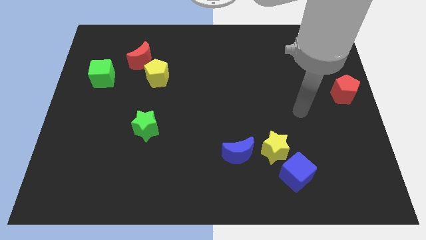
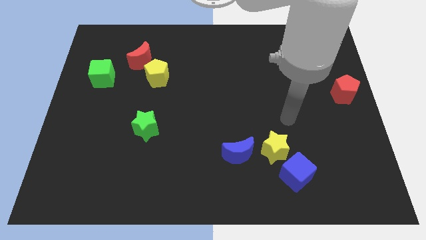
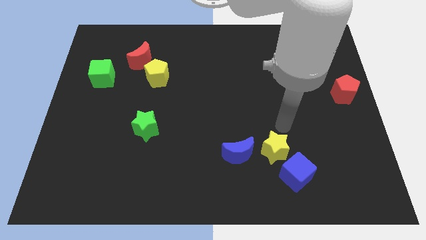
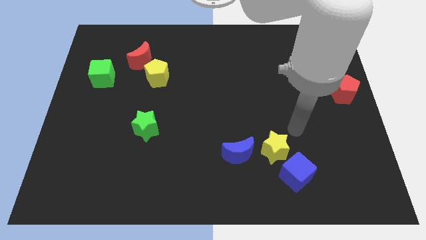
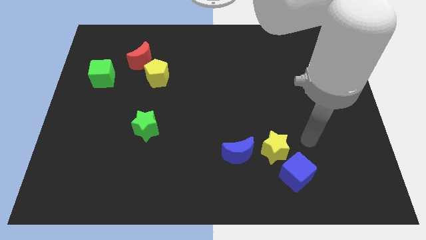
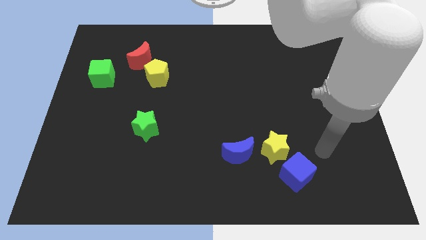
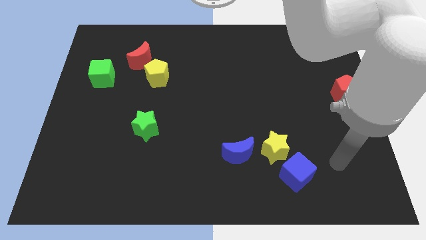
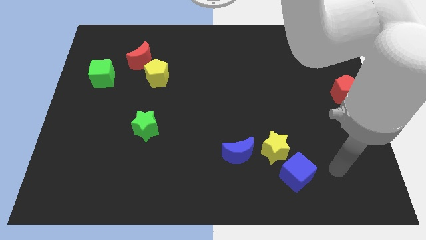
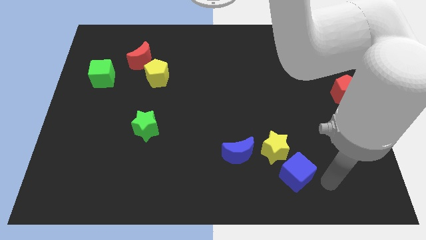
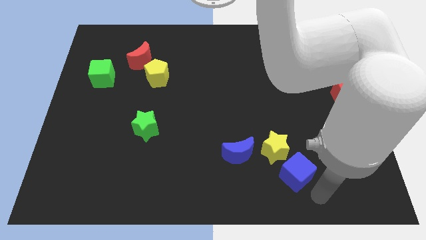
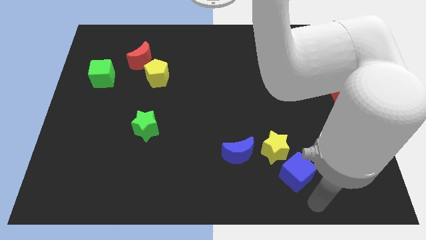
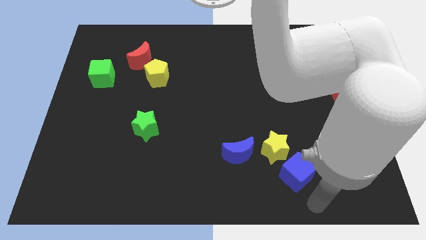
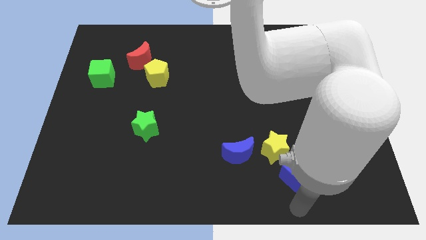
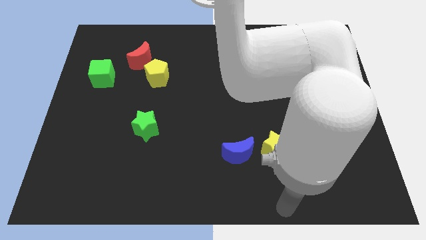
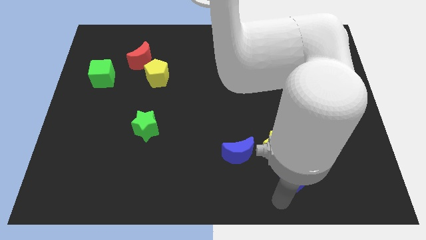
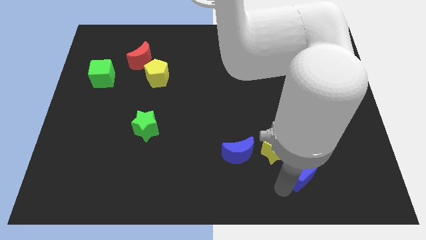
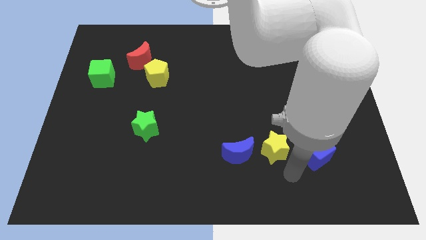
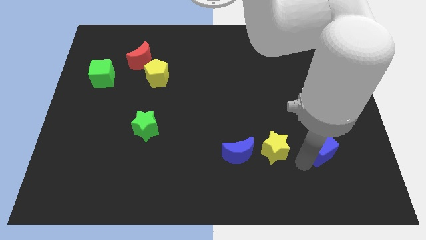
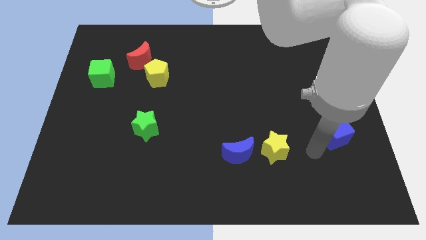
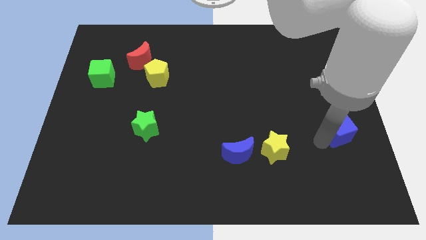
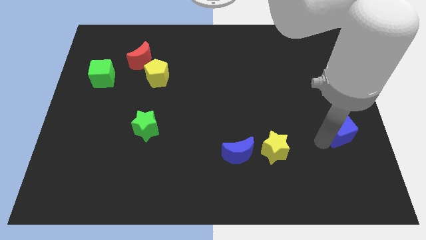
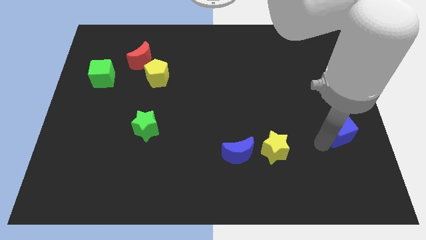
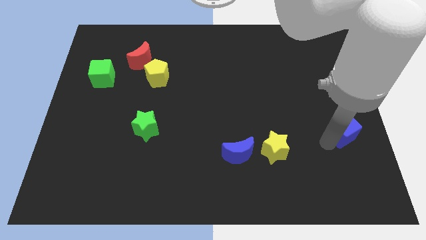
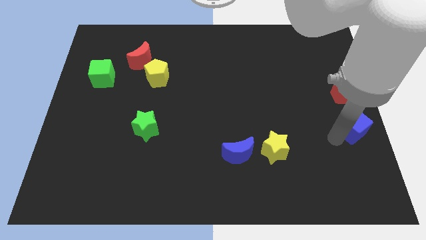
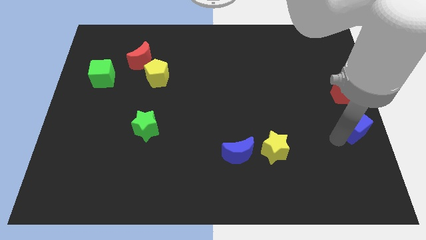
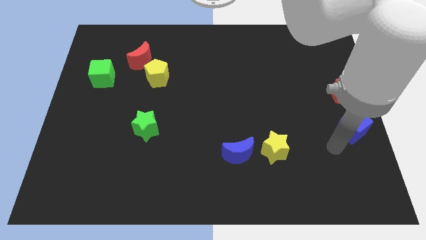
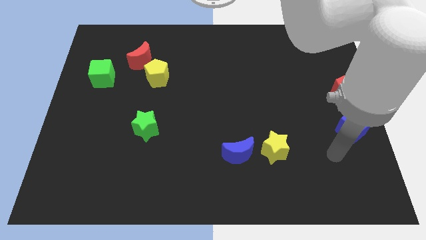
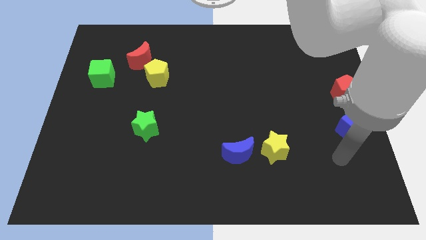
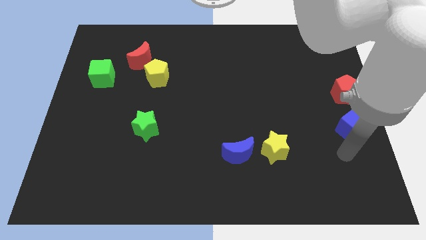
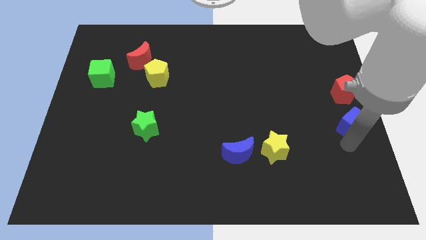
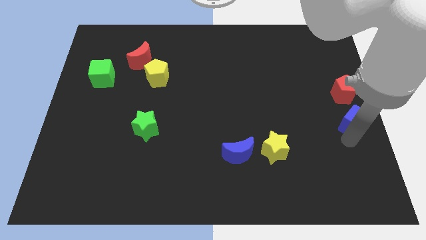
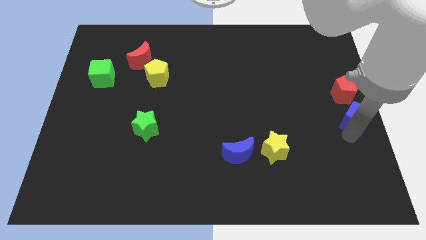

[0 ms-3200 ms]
move the blue cube to the bottom side of the red pentagon

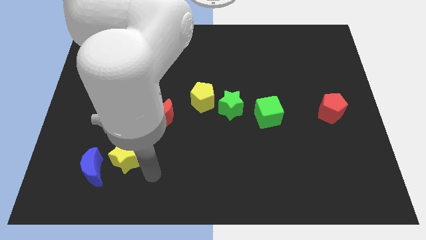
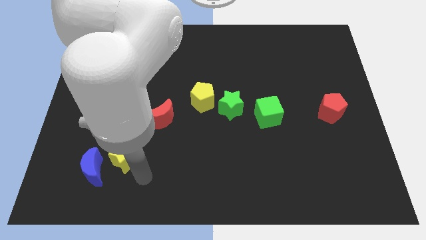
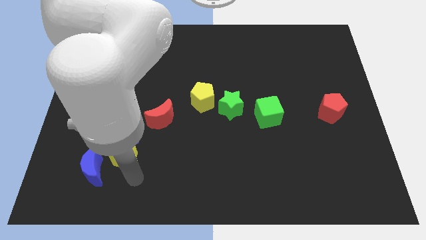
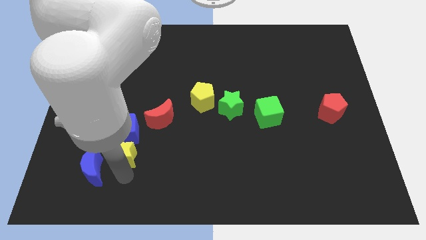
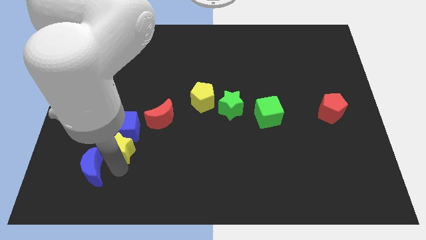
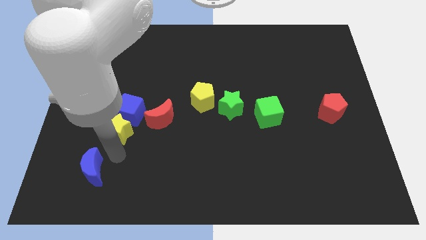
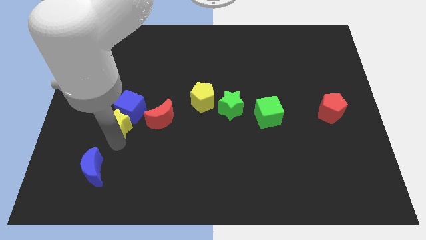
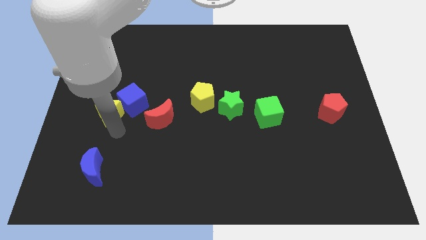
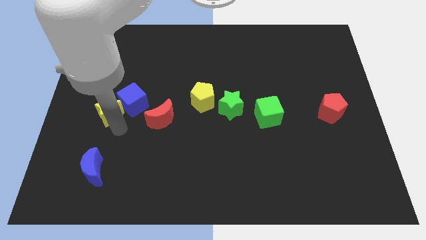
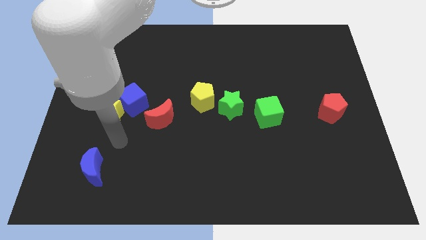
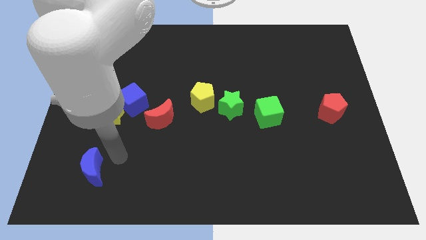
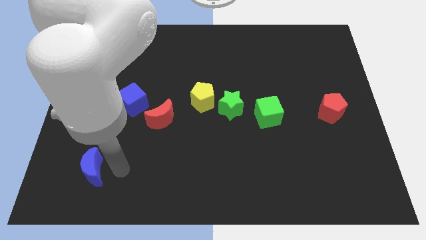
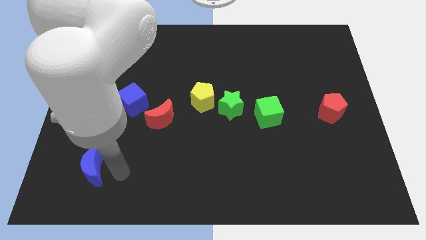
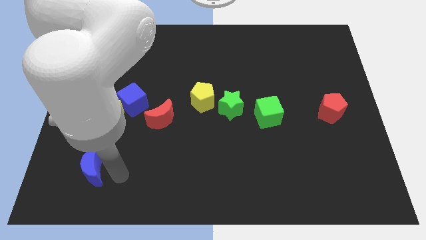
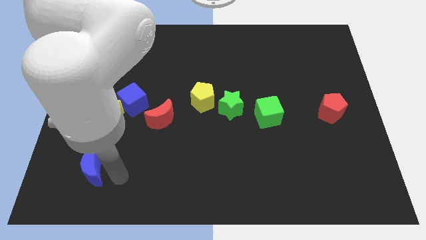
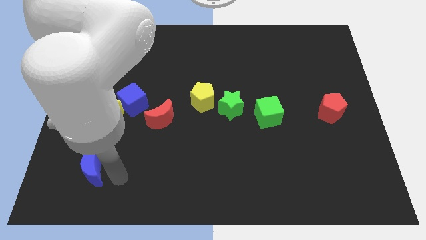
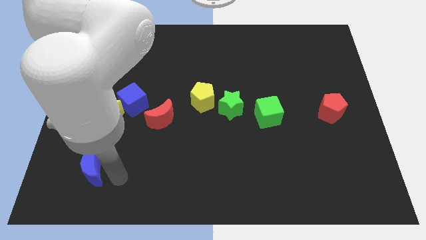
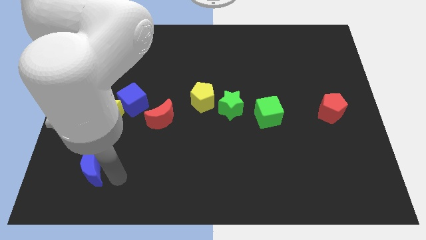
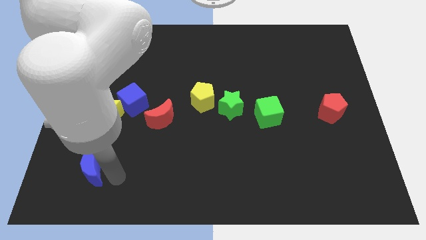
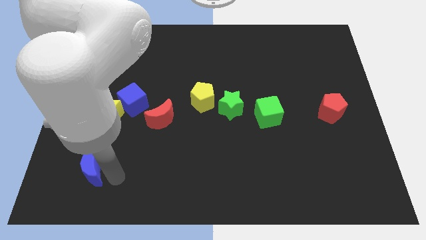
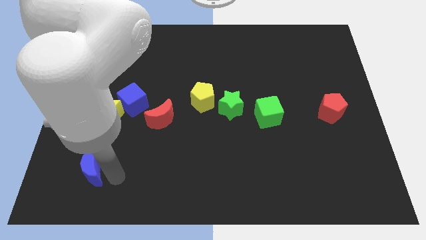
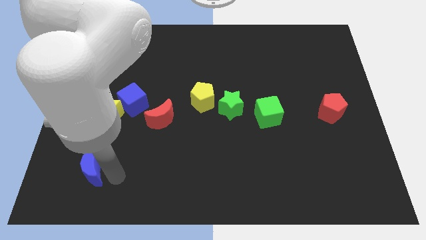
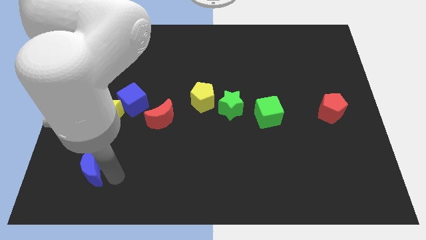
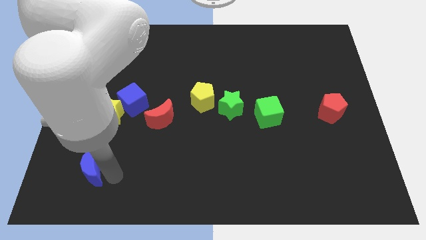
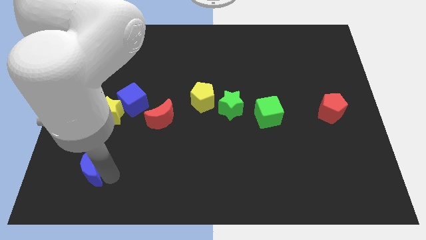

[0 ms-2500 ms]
push yellow star into the blue cube

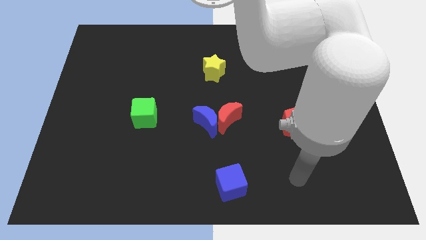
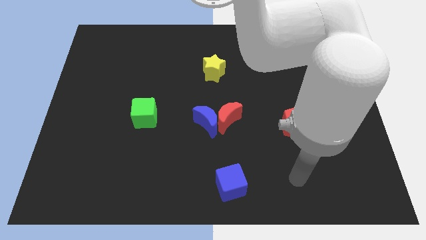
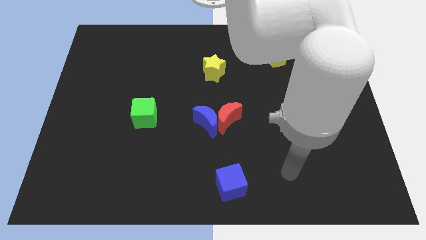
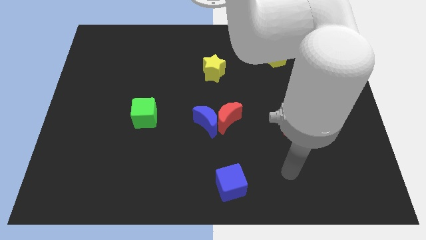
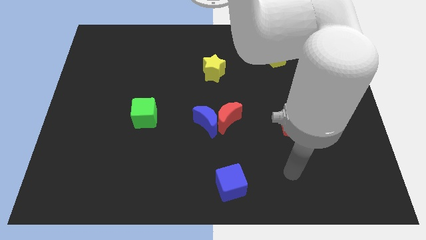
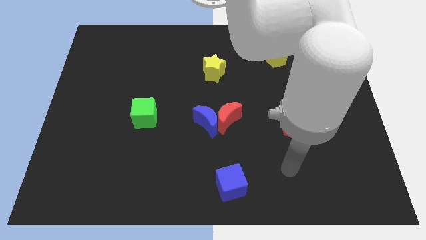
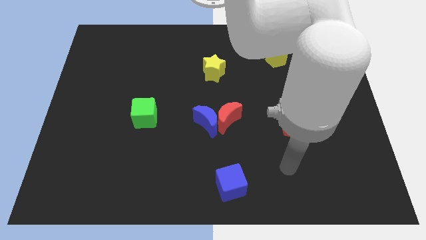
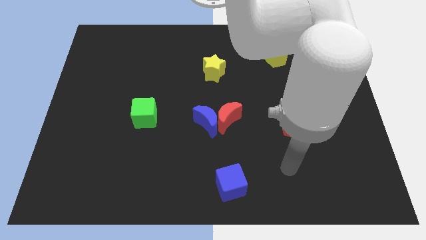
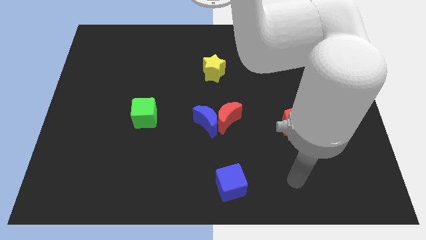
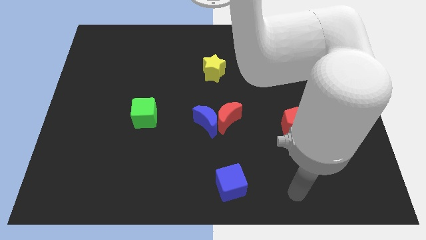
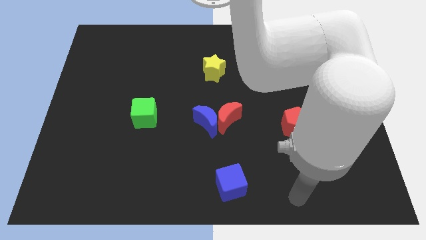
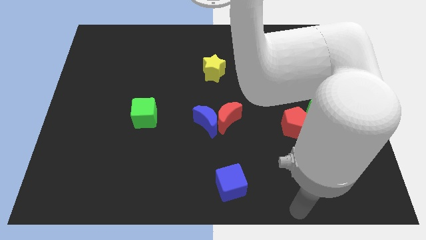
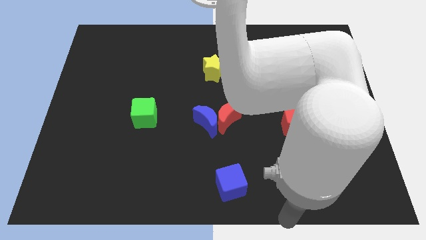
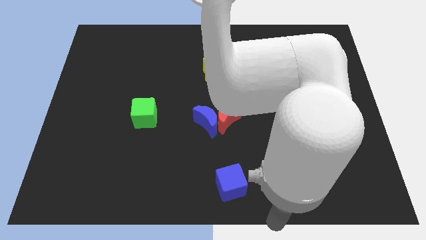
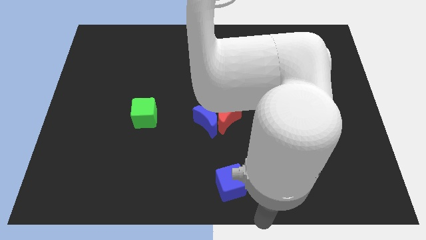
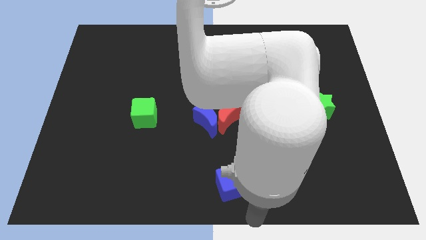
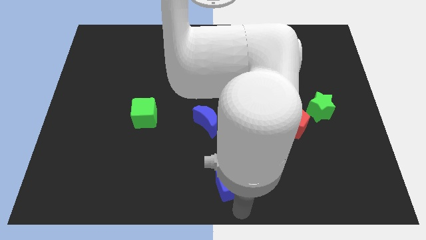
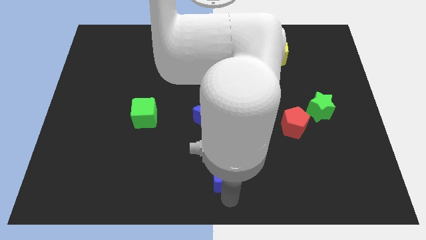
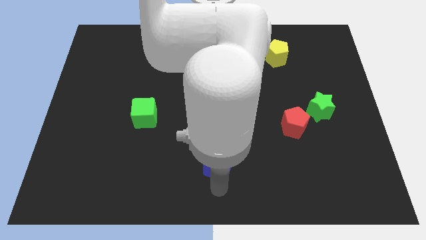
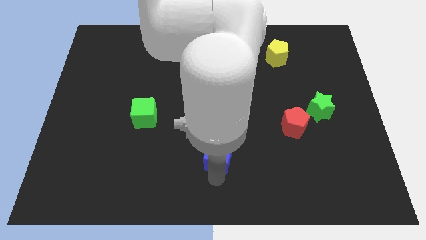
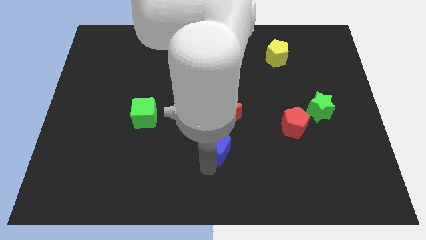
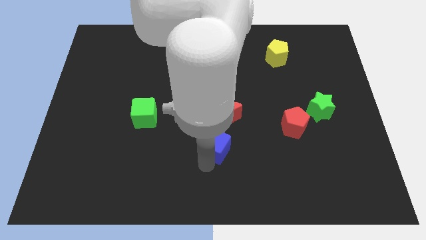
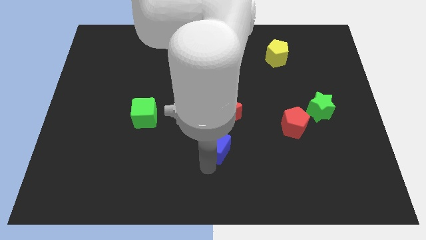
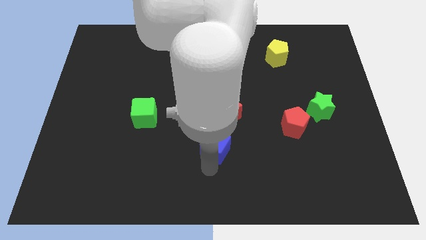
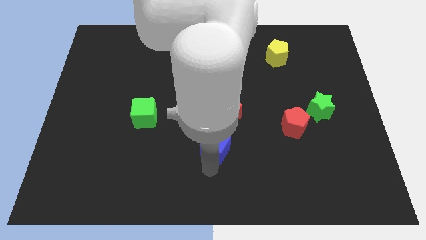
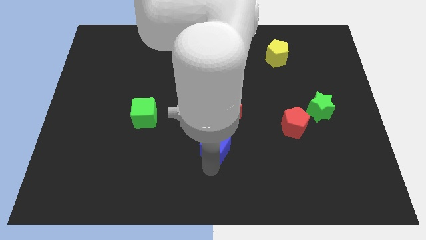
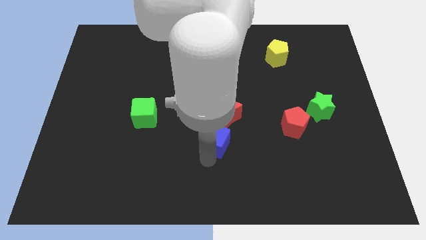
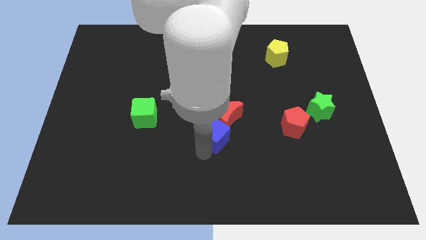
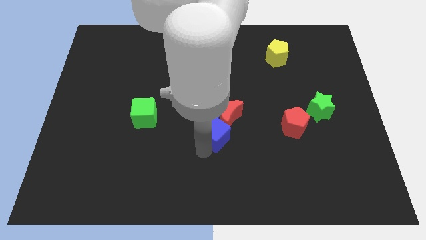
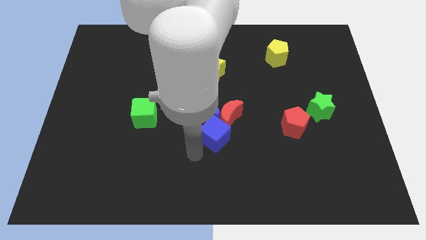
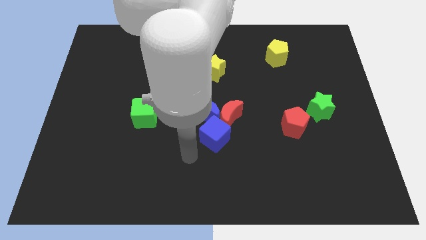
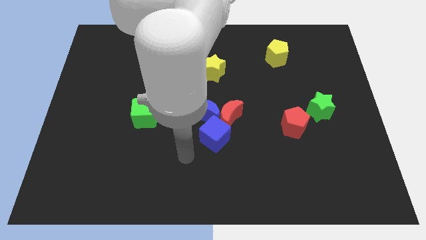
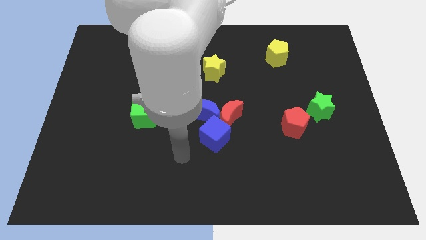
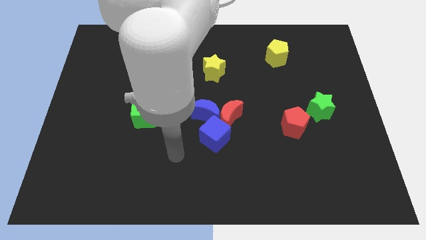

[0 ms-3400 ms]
move the blue cube below the crescents

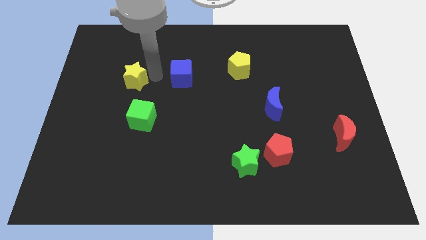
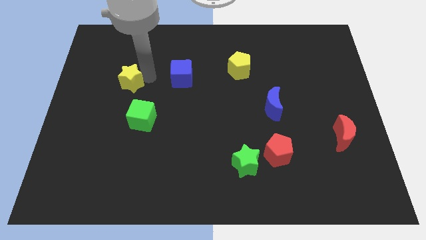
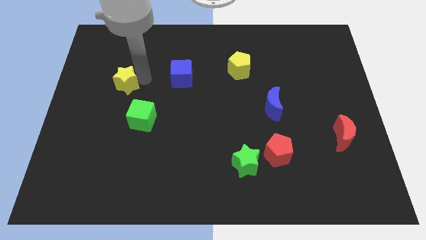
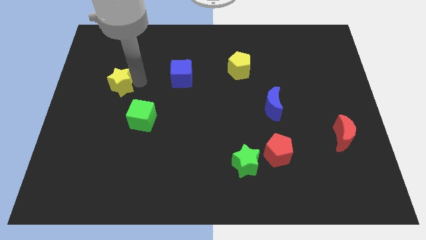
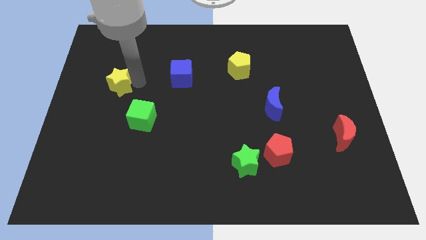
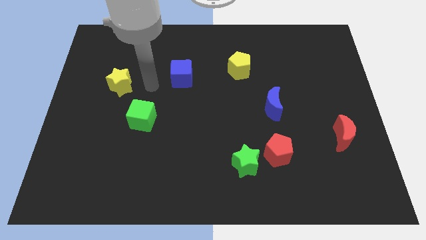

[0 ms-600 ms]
move the yellow star to the top left of the green cube
